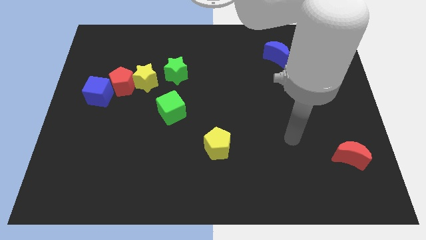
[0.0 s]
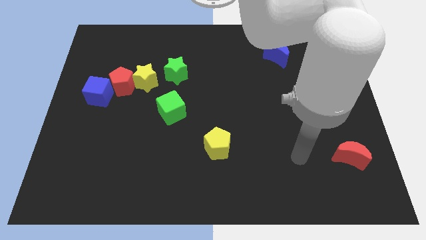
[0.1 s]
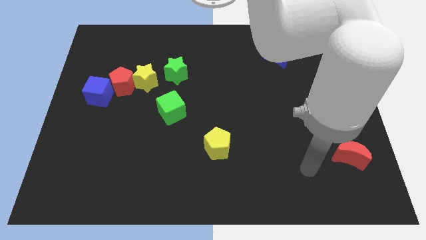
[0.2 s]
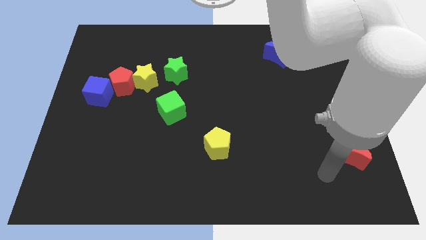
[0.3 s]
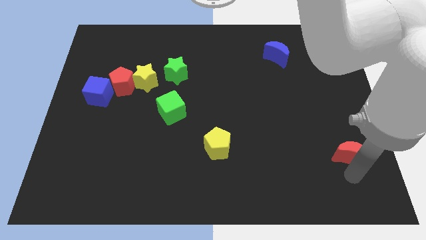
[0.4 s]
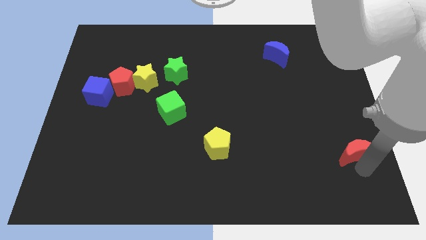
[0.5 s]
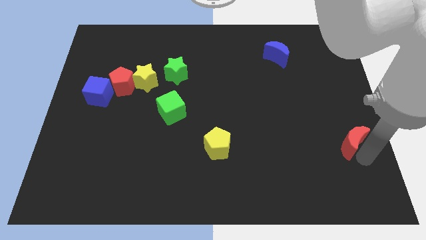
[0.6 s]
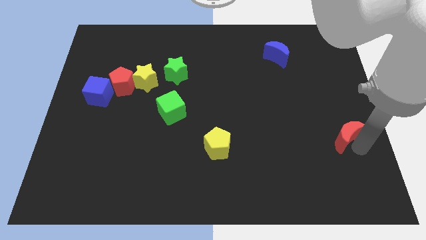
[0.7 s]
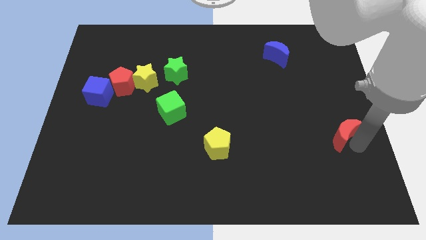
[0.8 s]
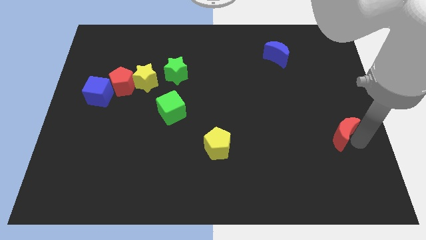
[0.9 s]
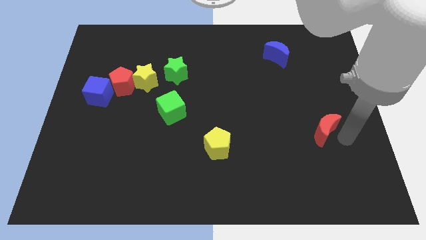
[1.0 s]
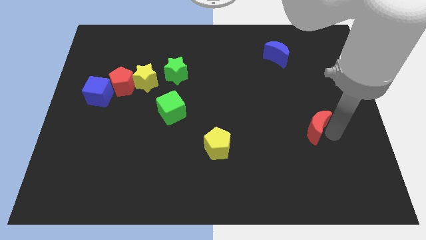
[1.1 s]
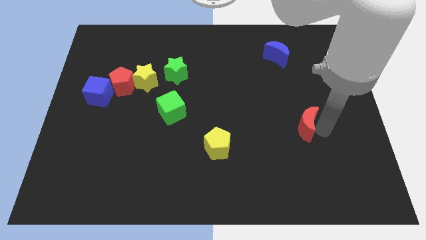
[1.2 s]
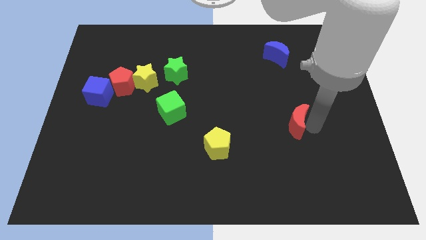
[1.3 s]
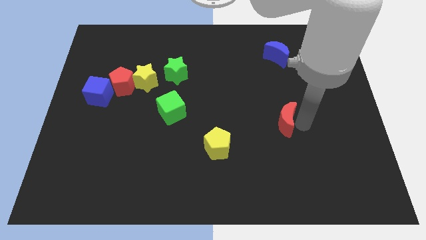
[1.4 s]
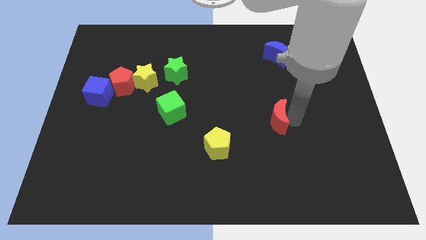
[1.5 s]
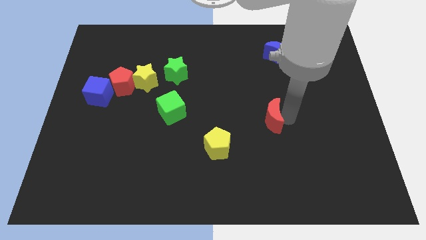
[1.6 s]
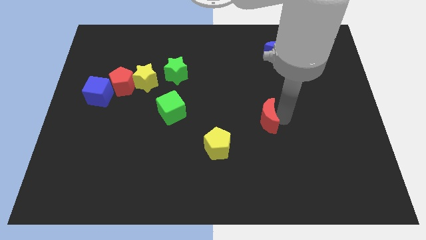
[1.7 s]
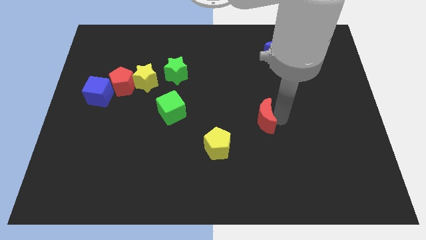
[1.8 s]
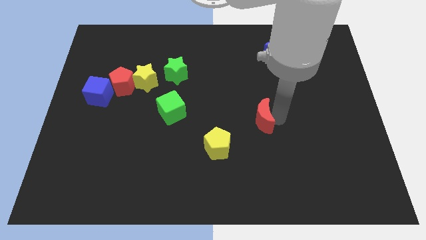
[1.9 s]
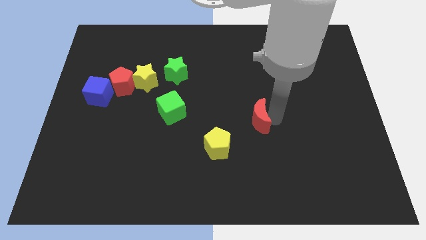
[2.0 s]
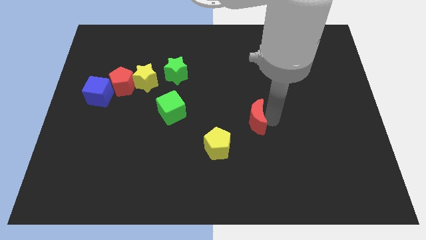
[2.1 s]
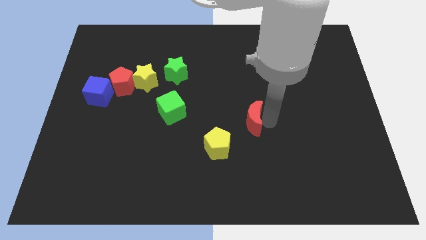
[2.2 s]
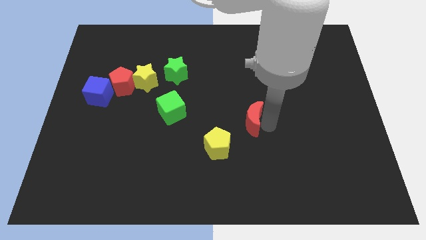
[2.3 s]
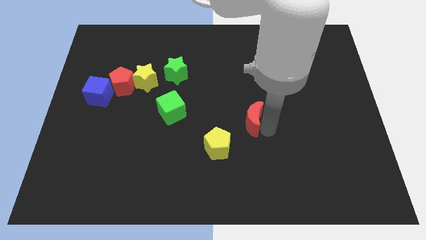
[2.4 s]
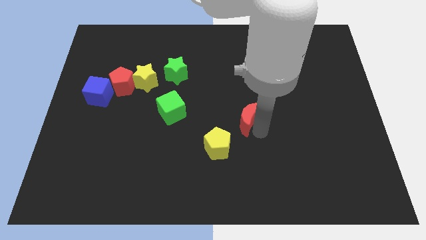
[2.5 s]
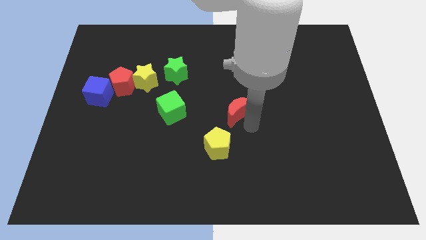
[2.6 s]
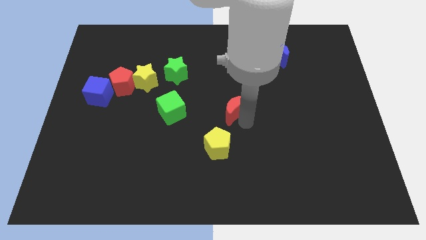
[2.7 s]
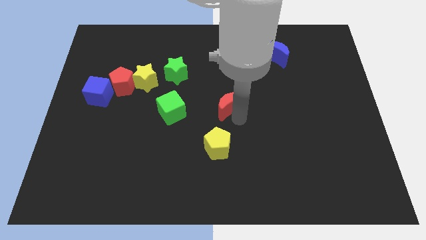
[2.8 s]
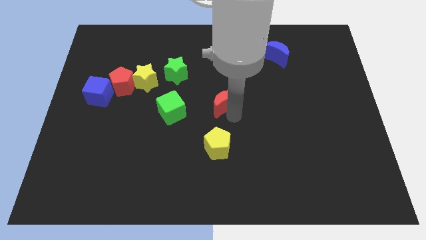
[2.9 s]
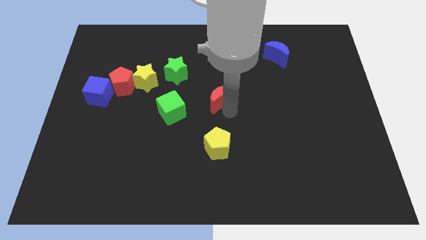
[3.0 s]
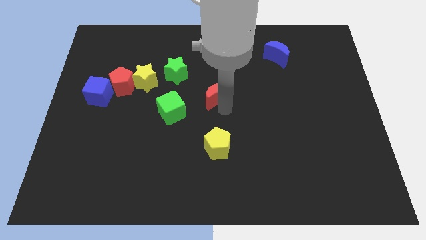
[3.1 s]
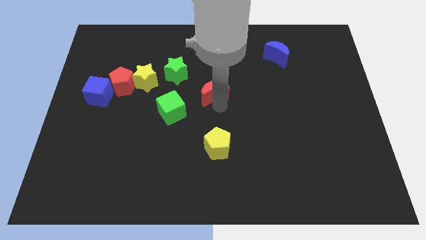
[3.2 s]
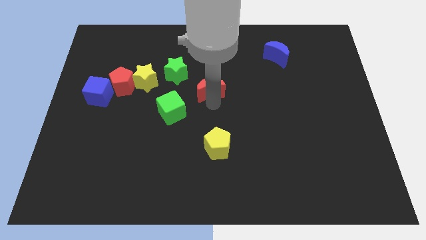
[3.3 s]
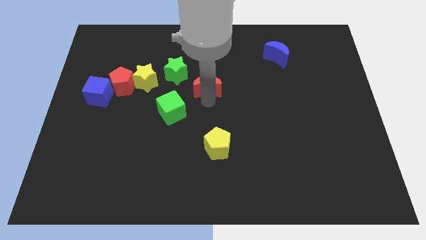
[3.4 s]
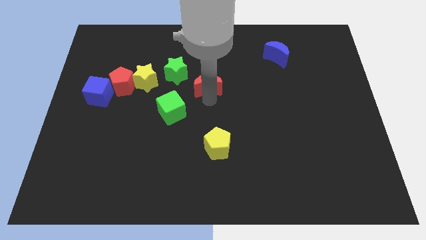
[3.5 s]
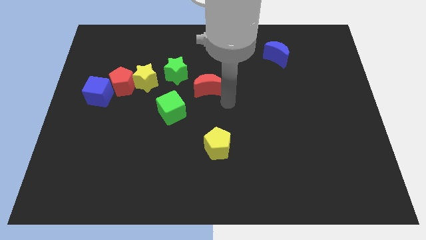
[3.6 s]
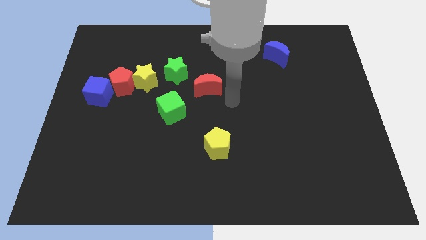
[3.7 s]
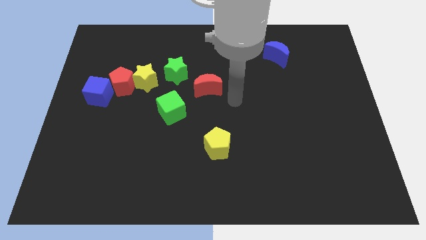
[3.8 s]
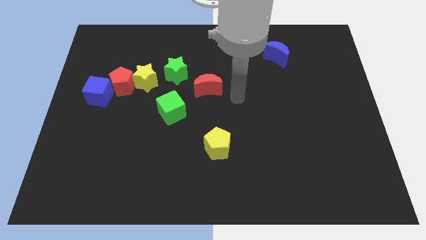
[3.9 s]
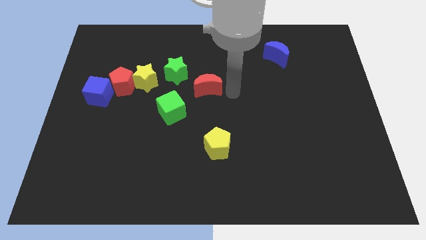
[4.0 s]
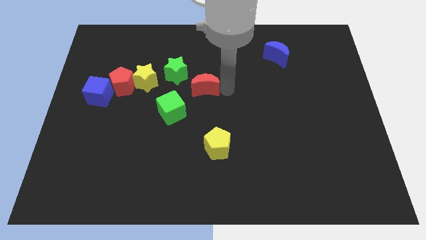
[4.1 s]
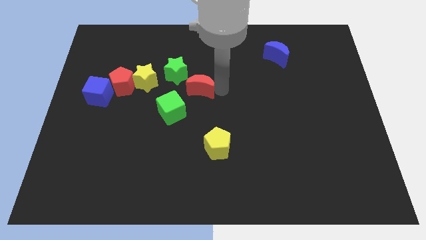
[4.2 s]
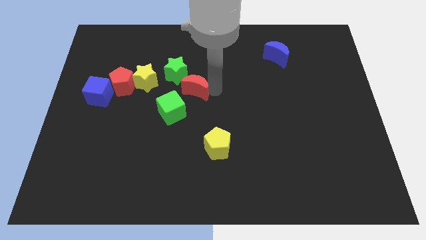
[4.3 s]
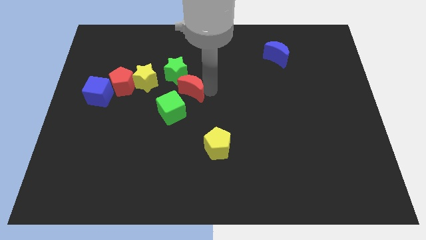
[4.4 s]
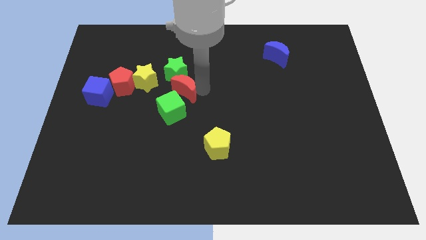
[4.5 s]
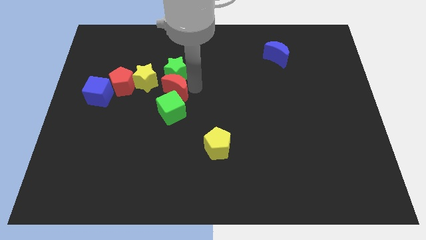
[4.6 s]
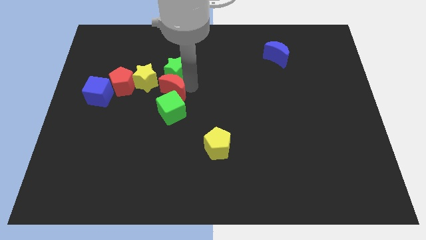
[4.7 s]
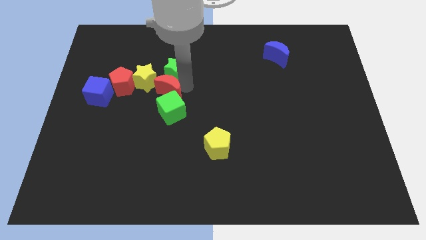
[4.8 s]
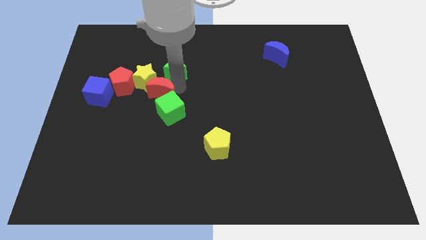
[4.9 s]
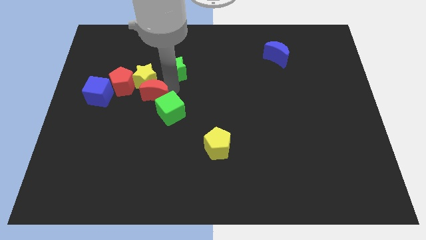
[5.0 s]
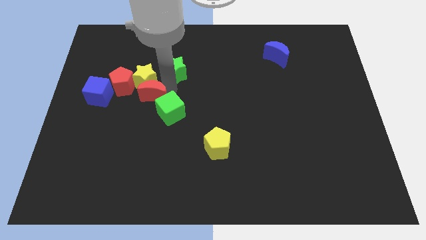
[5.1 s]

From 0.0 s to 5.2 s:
move the red moon to the yellow star

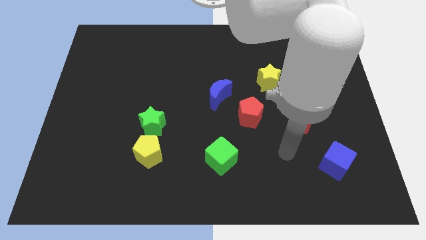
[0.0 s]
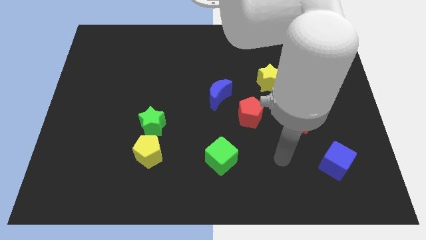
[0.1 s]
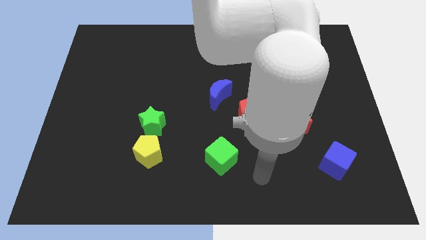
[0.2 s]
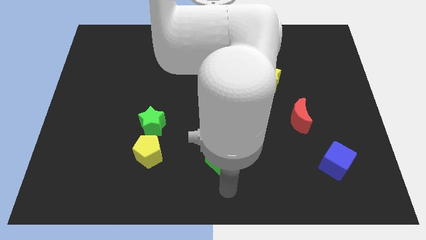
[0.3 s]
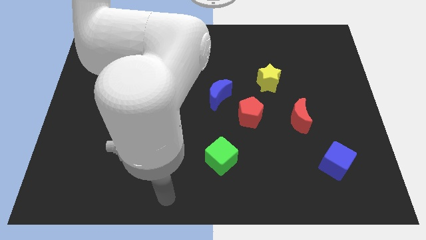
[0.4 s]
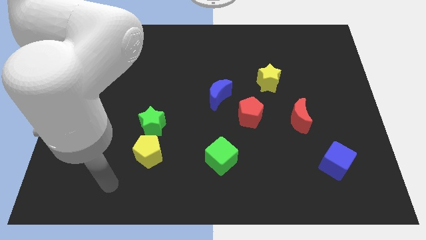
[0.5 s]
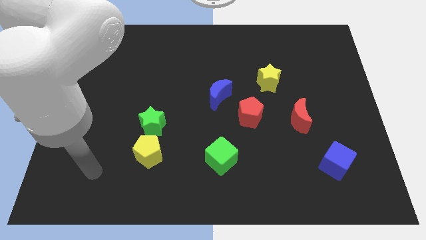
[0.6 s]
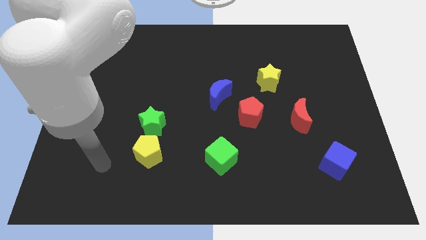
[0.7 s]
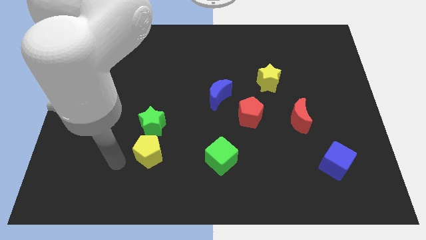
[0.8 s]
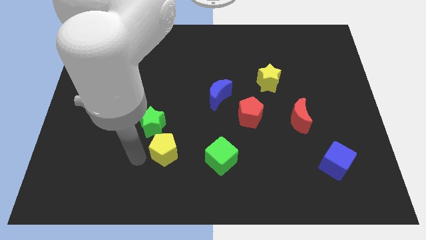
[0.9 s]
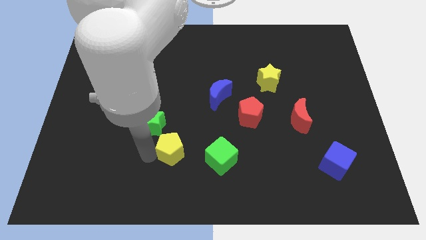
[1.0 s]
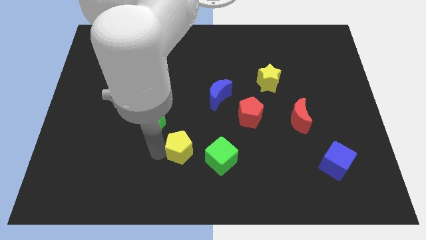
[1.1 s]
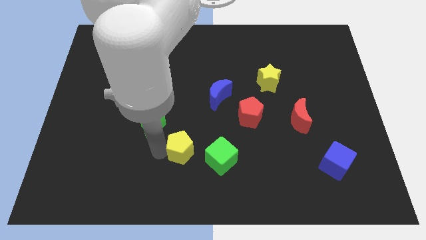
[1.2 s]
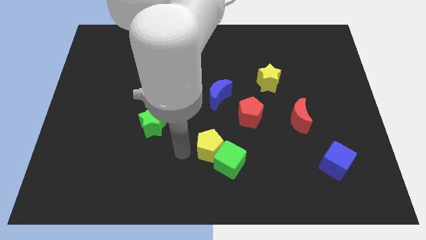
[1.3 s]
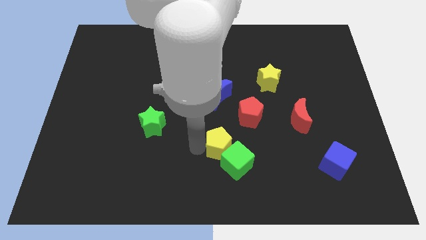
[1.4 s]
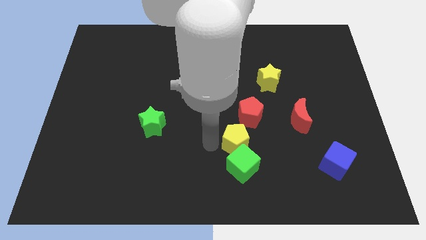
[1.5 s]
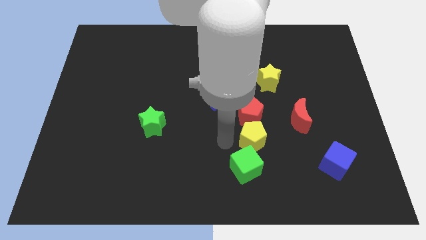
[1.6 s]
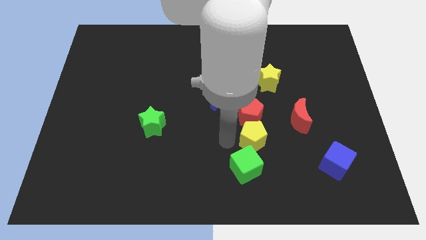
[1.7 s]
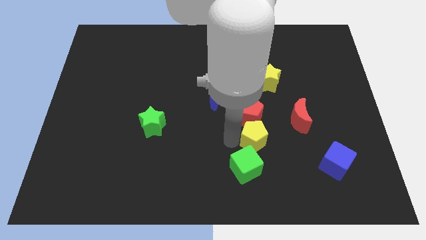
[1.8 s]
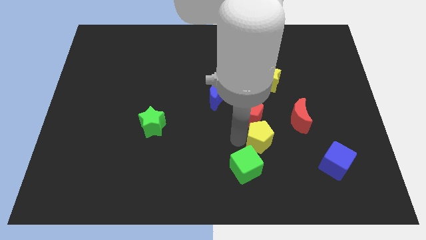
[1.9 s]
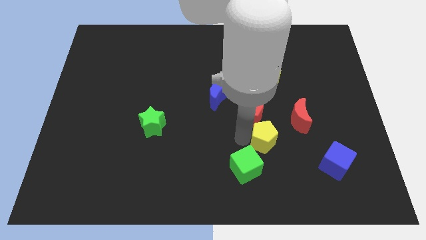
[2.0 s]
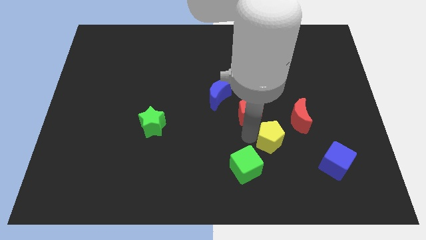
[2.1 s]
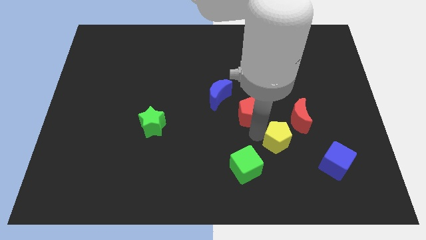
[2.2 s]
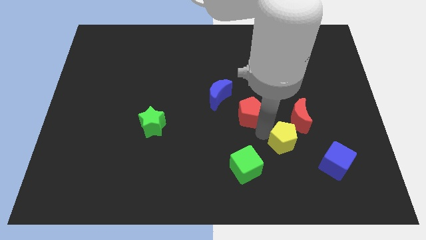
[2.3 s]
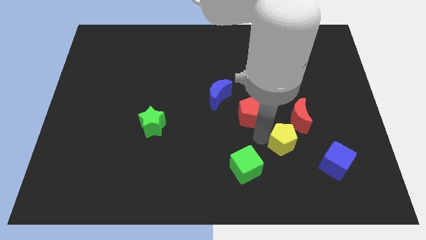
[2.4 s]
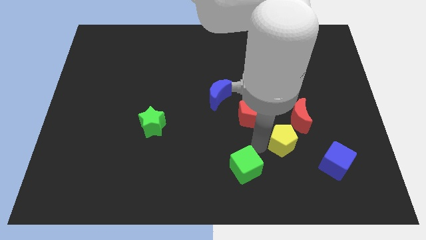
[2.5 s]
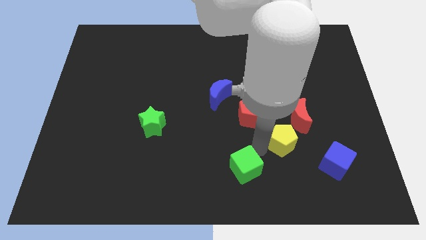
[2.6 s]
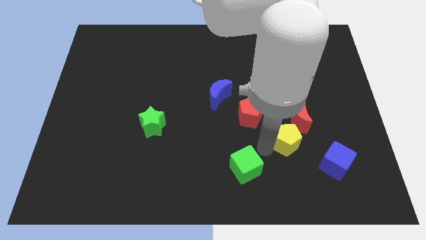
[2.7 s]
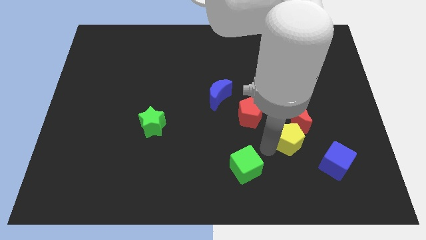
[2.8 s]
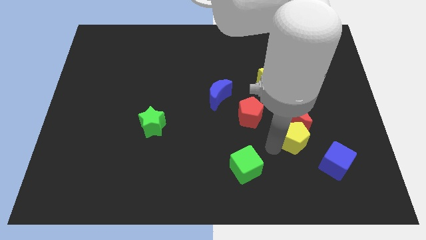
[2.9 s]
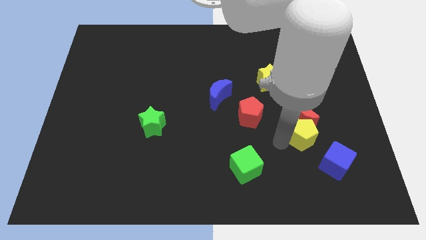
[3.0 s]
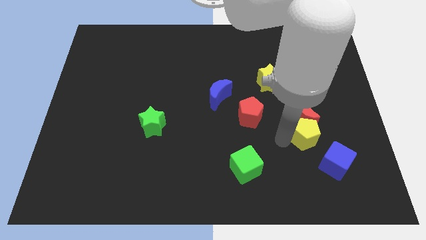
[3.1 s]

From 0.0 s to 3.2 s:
put the yellow pentagon to the red moon

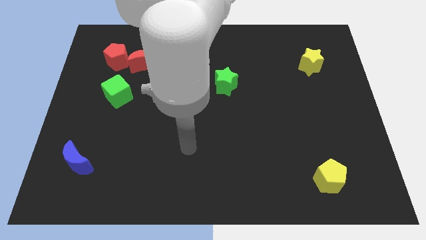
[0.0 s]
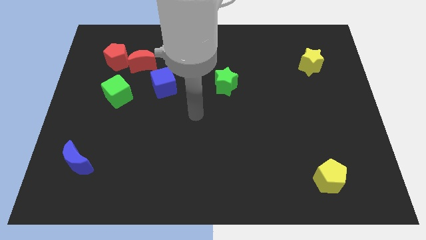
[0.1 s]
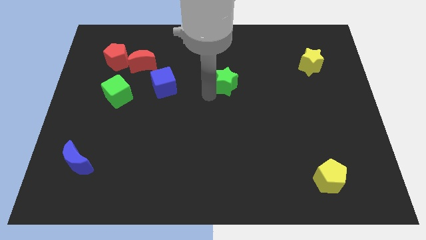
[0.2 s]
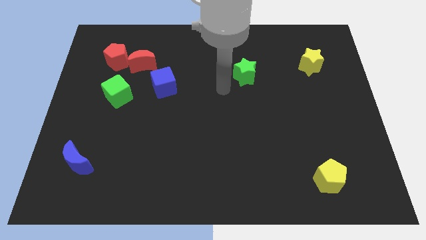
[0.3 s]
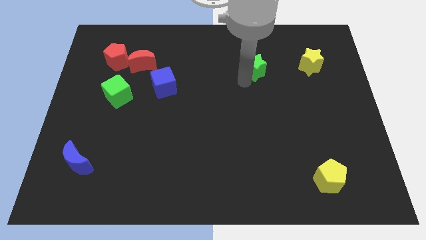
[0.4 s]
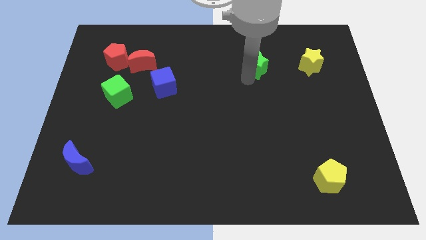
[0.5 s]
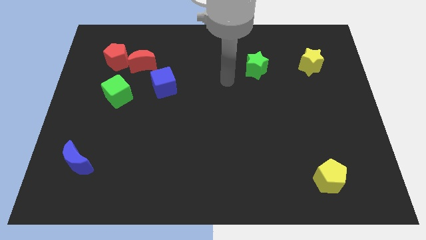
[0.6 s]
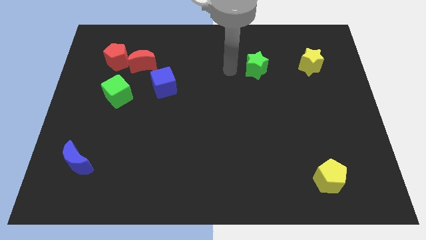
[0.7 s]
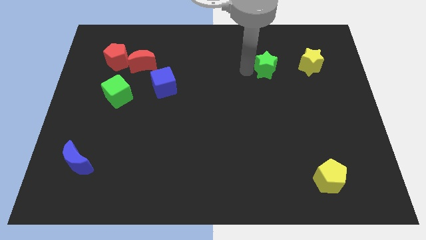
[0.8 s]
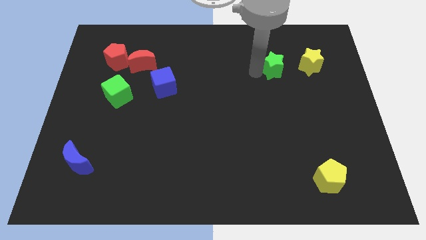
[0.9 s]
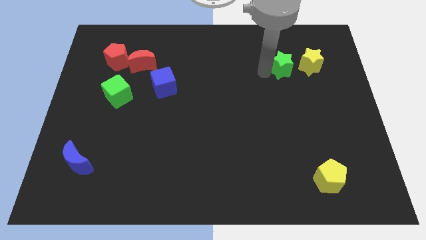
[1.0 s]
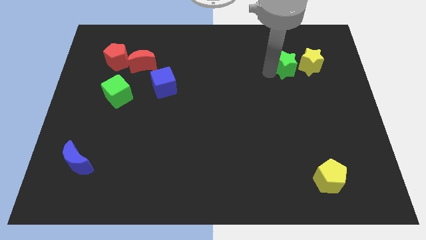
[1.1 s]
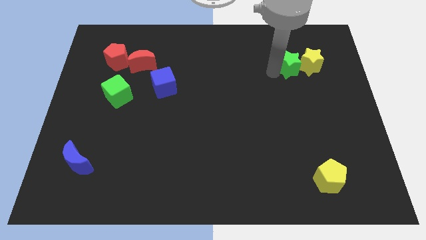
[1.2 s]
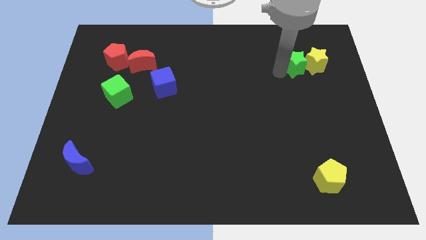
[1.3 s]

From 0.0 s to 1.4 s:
push the green star next to the yellow star
